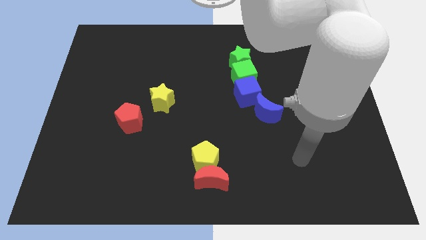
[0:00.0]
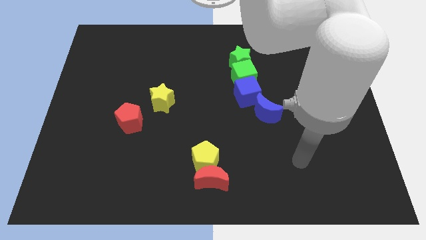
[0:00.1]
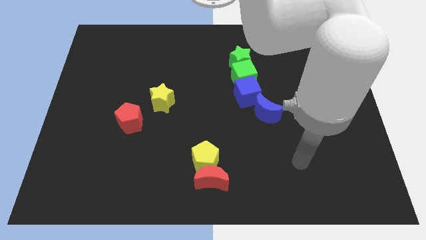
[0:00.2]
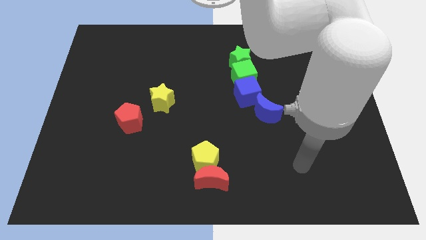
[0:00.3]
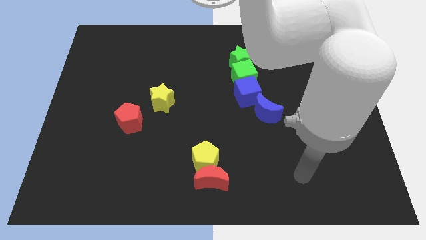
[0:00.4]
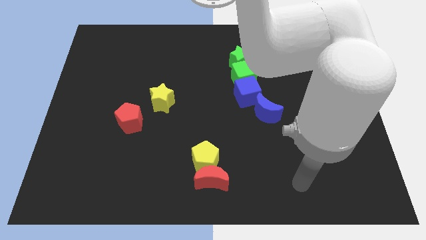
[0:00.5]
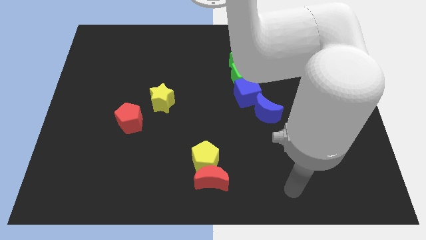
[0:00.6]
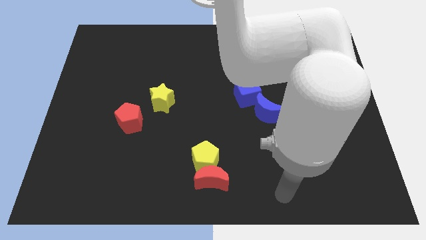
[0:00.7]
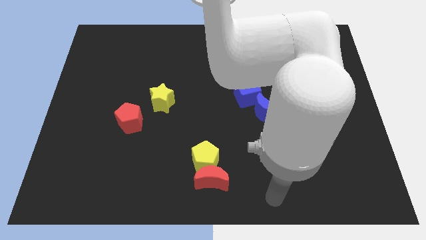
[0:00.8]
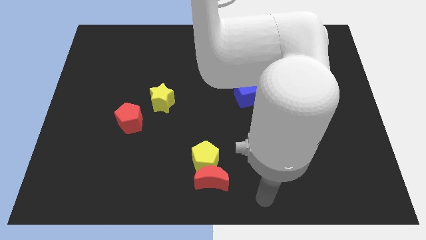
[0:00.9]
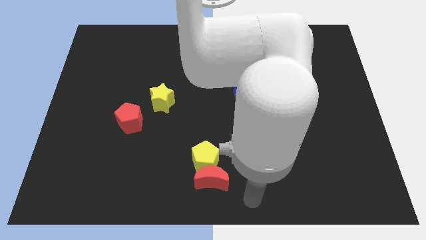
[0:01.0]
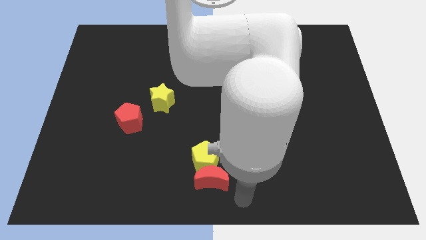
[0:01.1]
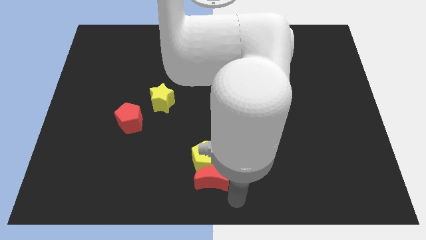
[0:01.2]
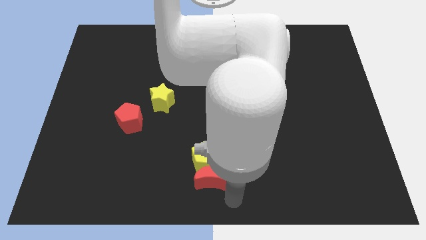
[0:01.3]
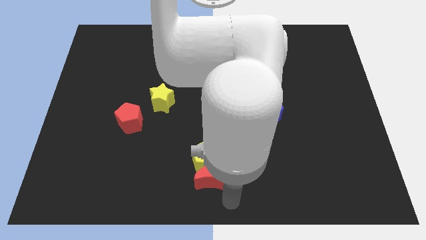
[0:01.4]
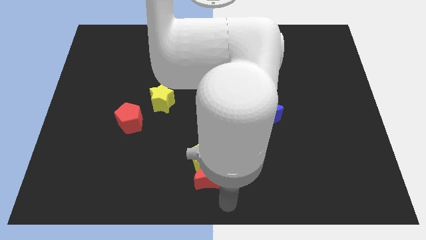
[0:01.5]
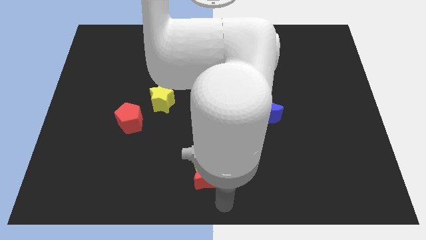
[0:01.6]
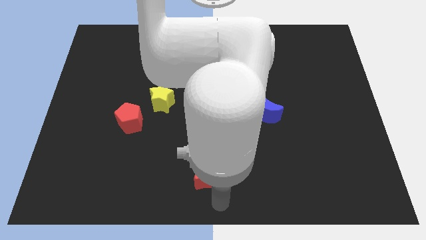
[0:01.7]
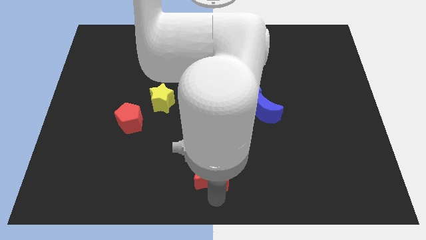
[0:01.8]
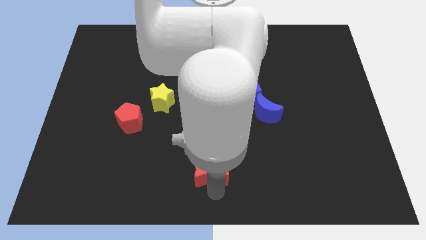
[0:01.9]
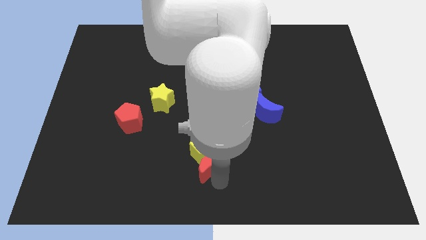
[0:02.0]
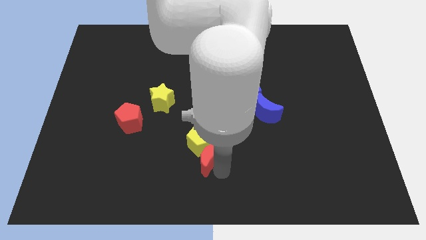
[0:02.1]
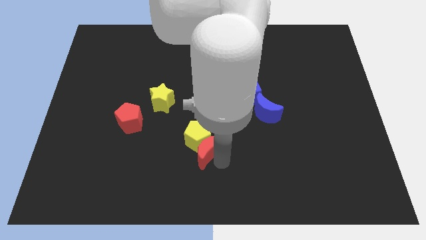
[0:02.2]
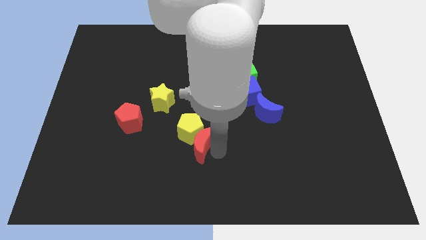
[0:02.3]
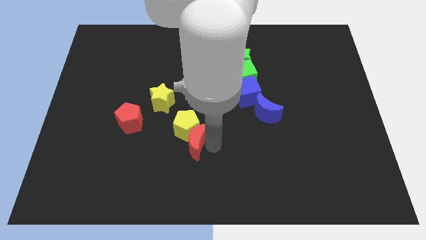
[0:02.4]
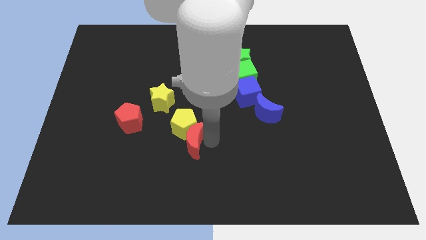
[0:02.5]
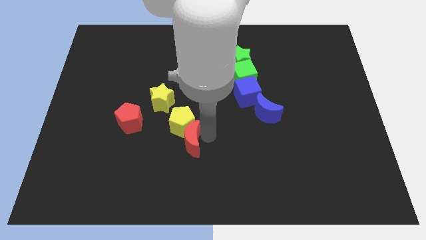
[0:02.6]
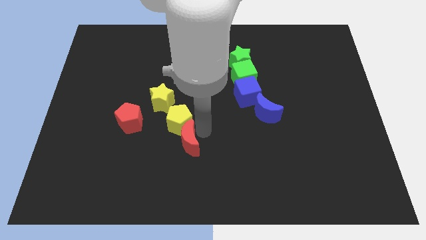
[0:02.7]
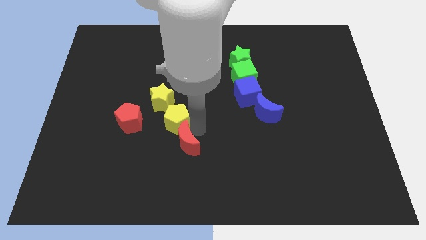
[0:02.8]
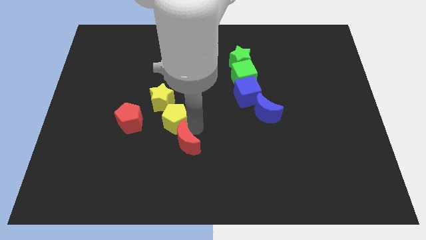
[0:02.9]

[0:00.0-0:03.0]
push the red moon along with the yellow pentagon close to the yellow star

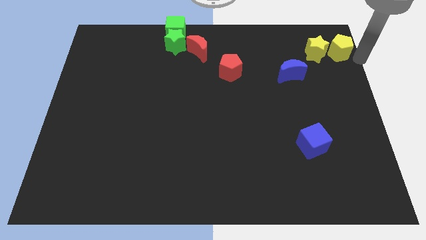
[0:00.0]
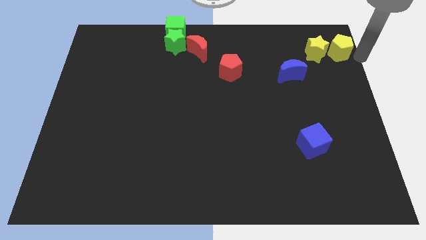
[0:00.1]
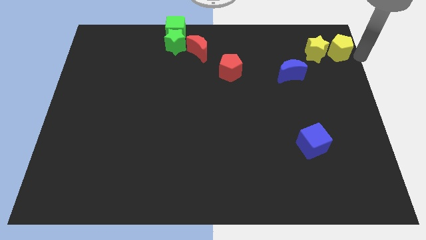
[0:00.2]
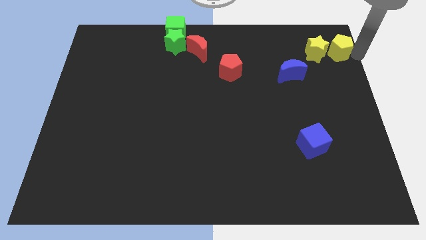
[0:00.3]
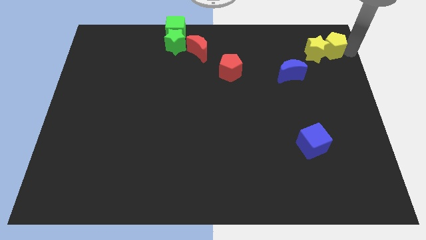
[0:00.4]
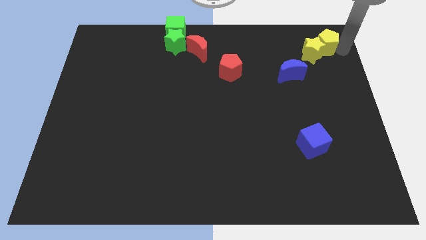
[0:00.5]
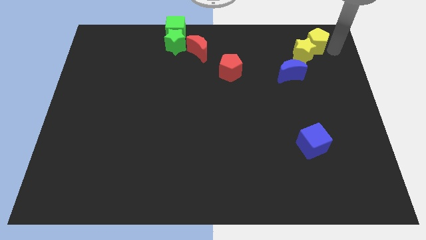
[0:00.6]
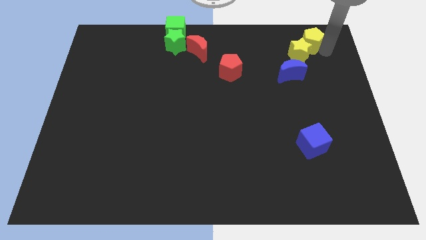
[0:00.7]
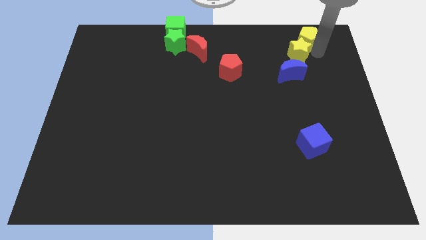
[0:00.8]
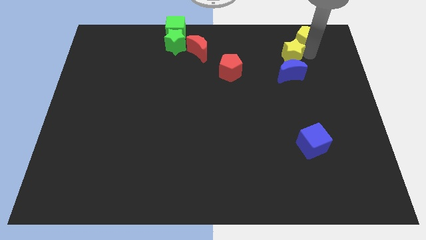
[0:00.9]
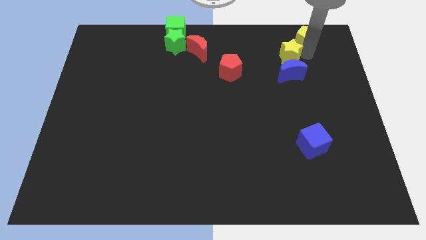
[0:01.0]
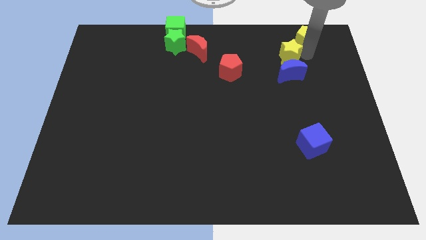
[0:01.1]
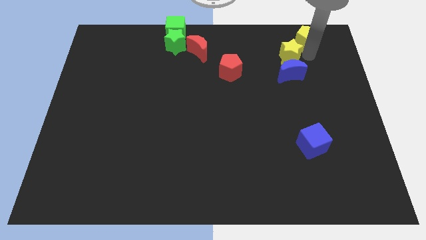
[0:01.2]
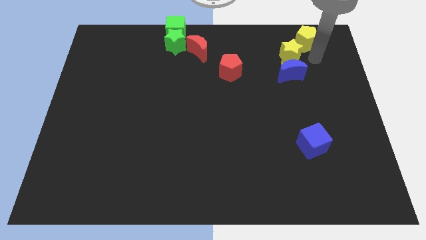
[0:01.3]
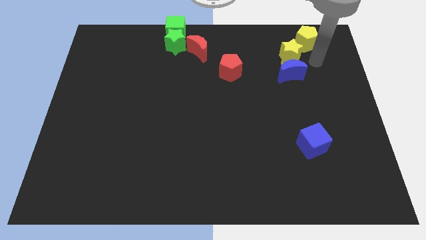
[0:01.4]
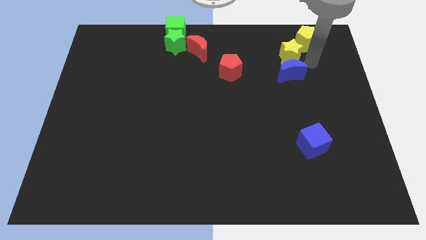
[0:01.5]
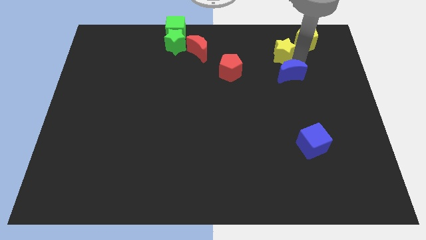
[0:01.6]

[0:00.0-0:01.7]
slide the yellow star above the blue moon

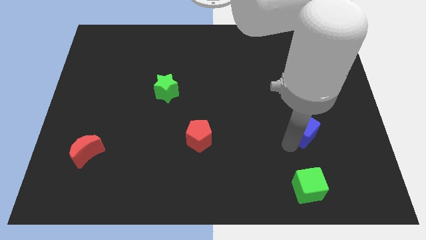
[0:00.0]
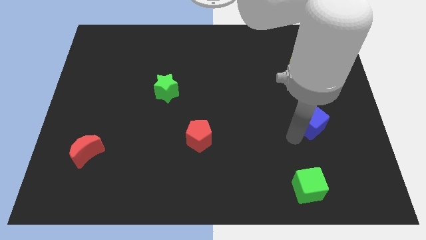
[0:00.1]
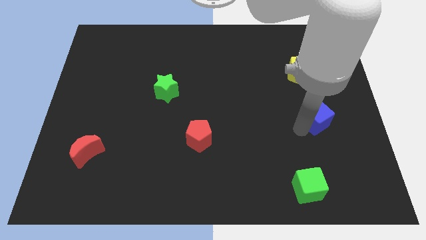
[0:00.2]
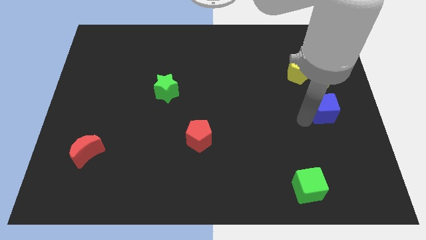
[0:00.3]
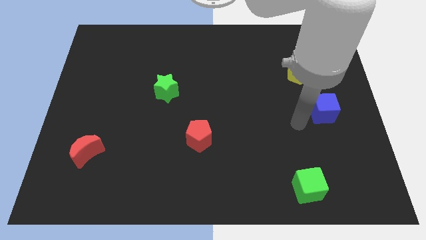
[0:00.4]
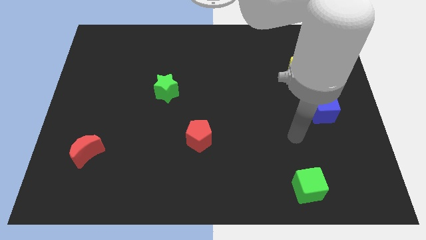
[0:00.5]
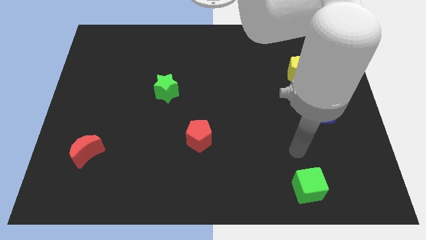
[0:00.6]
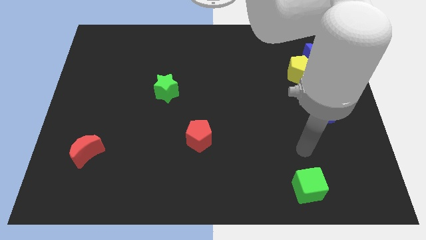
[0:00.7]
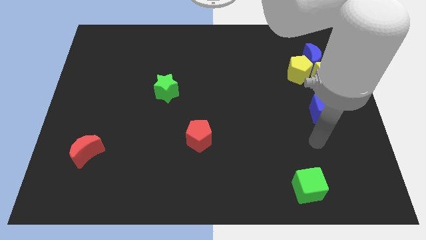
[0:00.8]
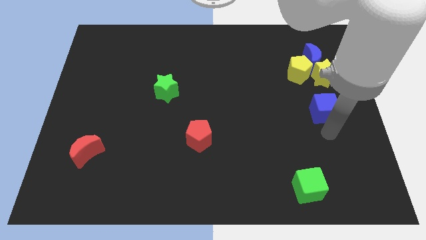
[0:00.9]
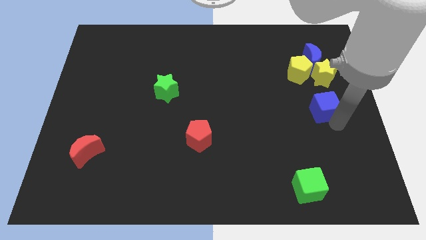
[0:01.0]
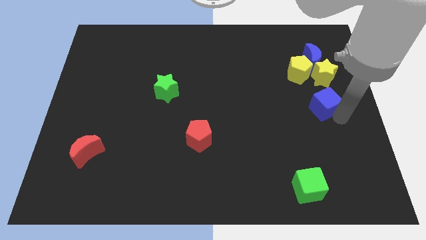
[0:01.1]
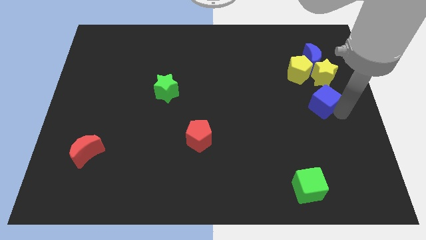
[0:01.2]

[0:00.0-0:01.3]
push the blue cube below the yellow star

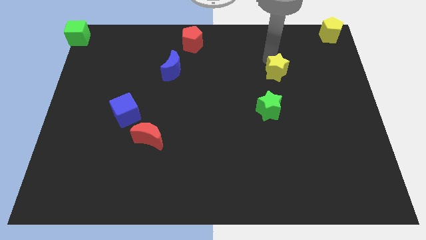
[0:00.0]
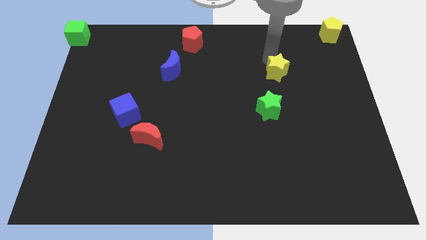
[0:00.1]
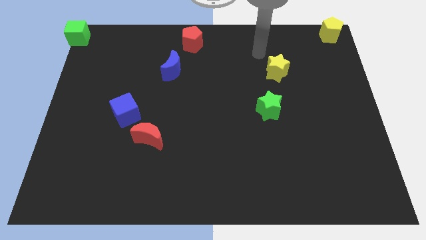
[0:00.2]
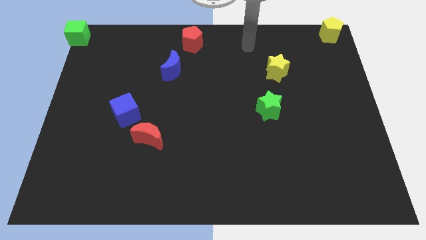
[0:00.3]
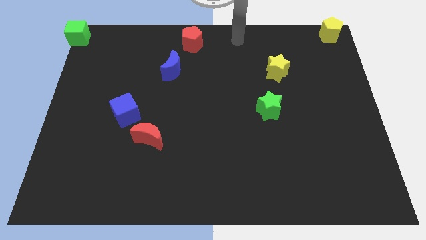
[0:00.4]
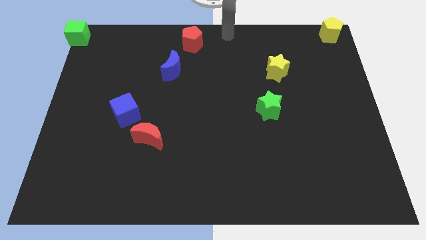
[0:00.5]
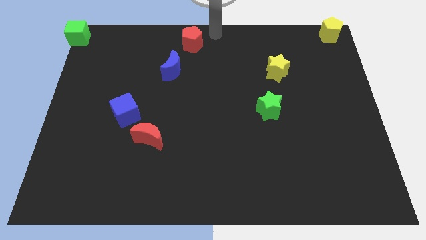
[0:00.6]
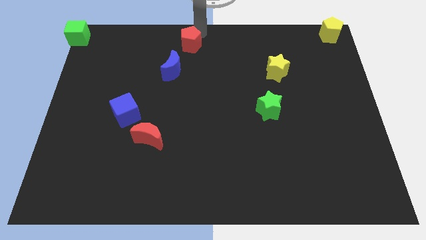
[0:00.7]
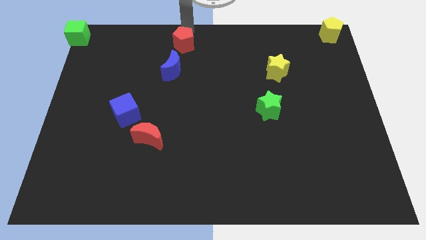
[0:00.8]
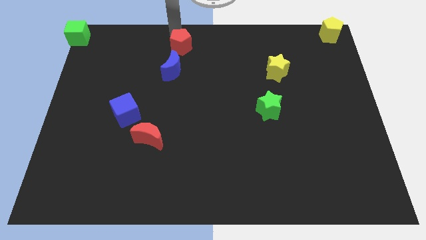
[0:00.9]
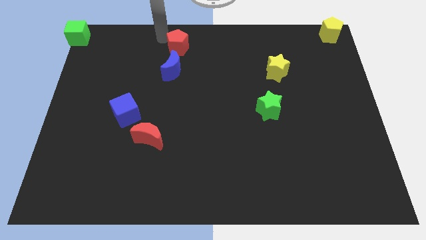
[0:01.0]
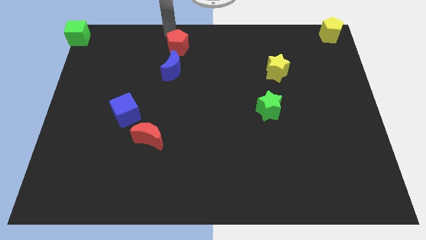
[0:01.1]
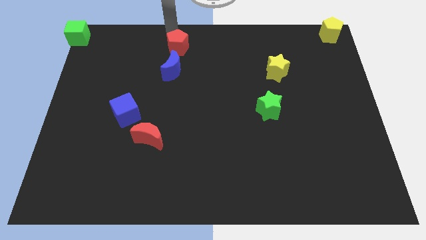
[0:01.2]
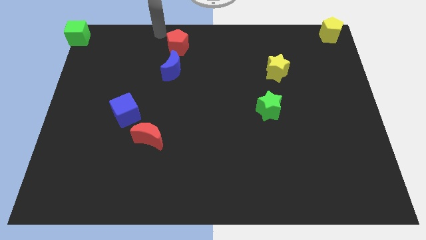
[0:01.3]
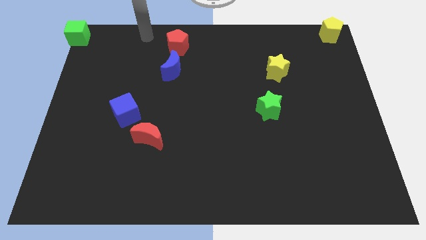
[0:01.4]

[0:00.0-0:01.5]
slightly move down the red pentagon

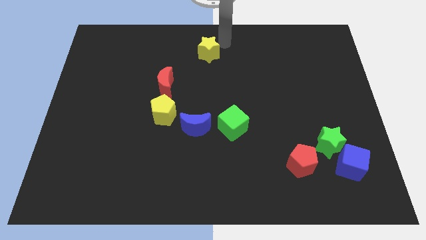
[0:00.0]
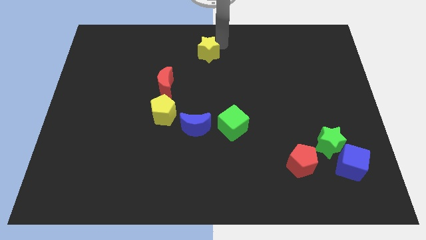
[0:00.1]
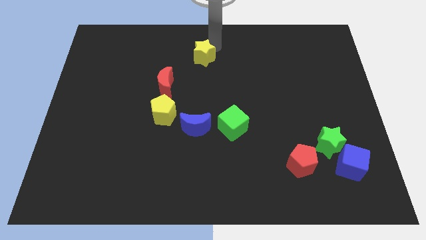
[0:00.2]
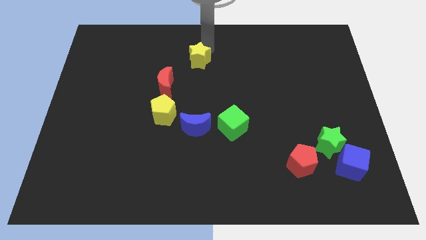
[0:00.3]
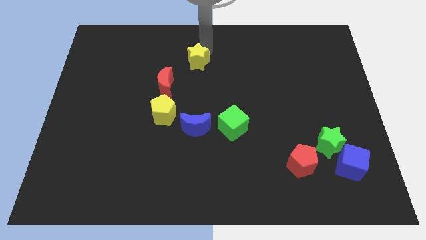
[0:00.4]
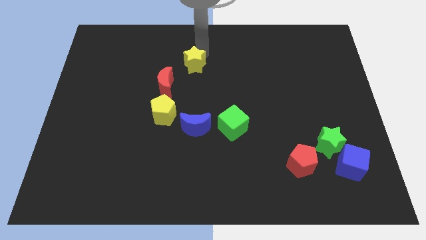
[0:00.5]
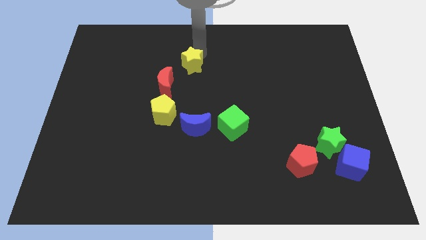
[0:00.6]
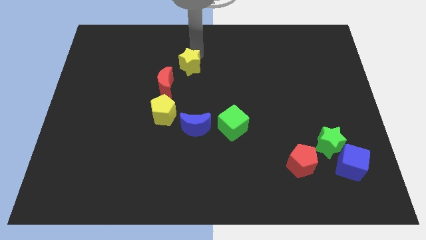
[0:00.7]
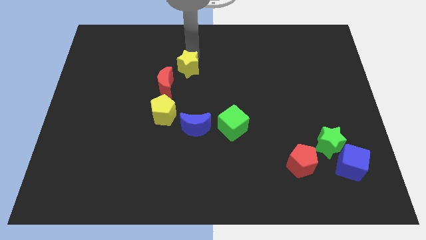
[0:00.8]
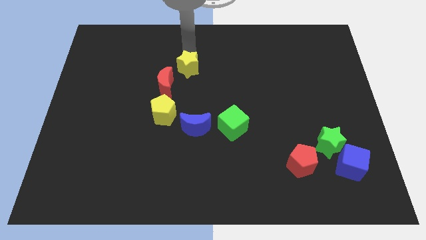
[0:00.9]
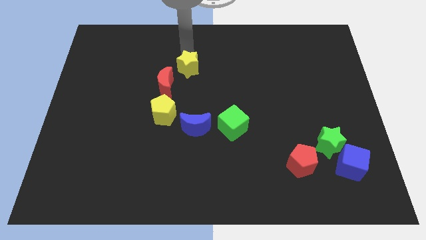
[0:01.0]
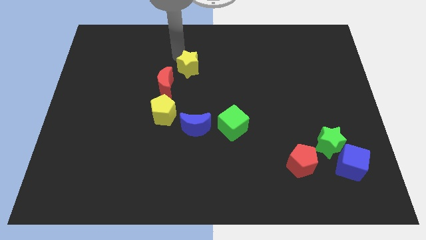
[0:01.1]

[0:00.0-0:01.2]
move the yellow star above the red moon

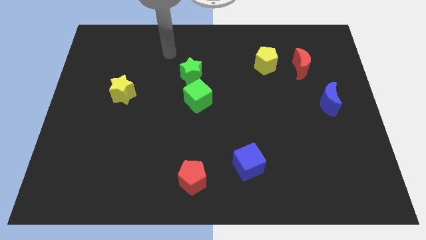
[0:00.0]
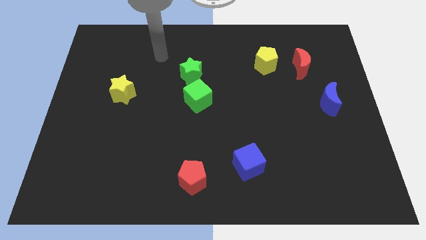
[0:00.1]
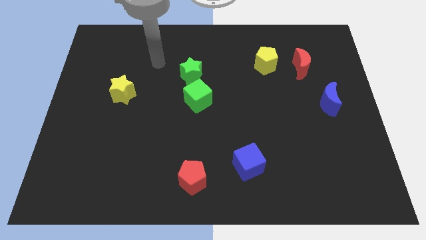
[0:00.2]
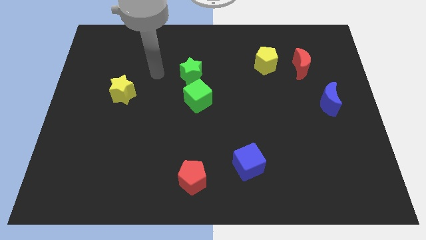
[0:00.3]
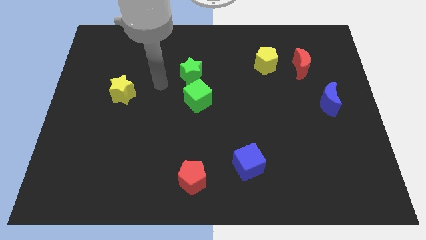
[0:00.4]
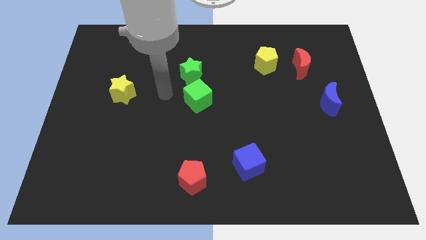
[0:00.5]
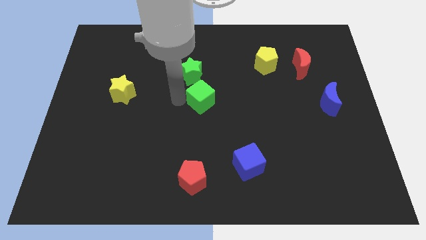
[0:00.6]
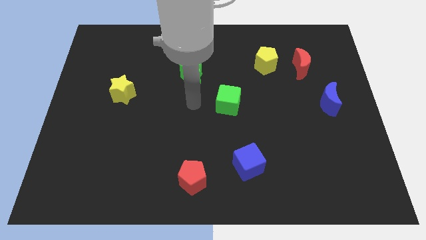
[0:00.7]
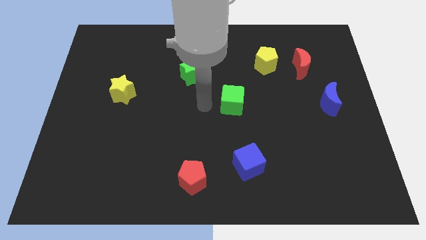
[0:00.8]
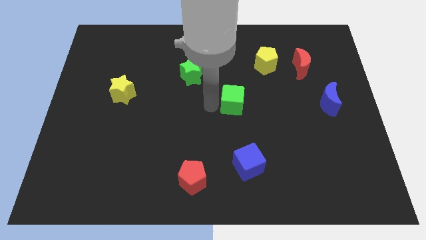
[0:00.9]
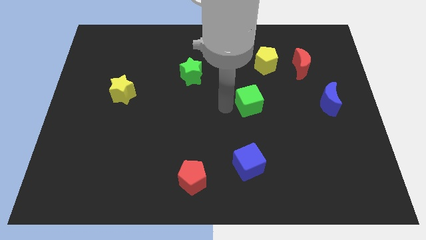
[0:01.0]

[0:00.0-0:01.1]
separate green cube from green star
